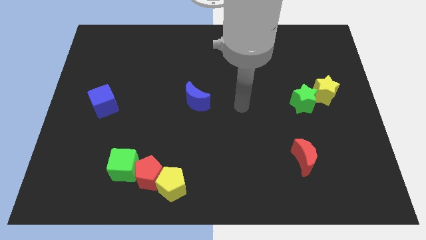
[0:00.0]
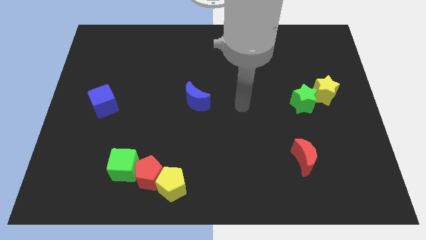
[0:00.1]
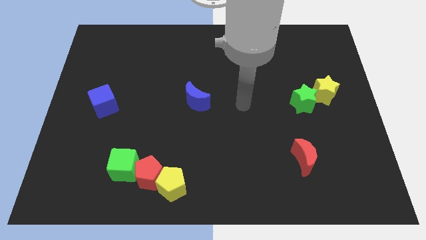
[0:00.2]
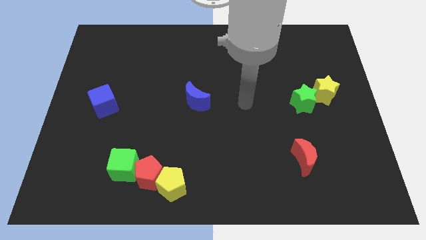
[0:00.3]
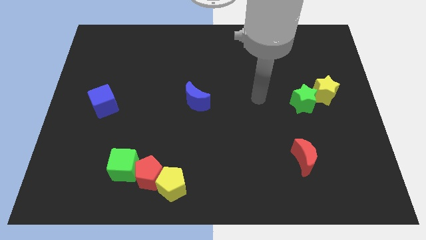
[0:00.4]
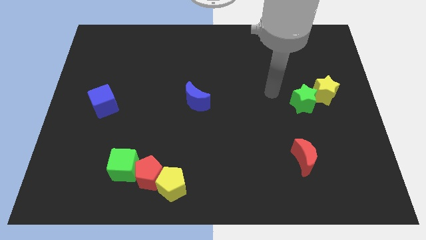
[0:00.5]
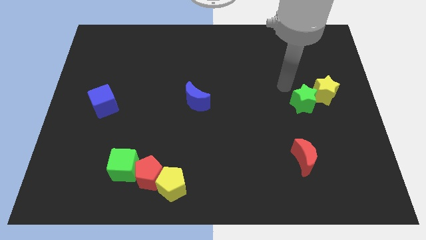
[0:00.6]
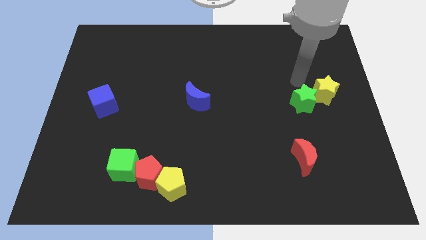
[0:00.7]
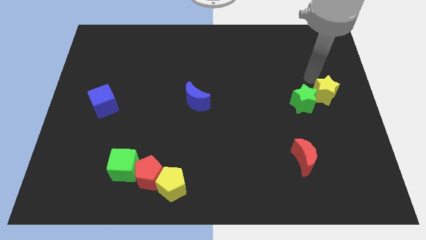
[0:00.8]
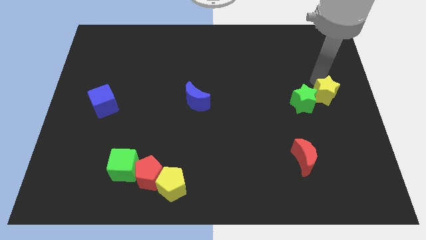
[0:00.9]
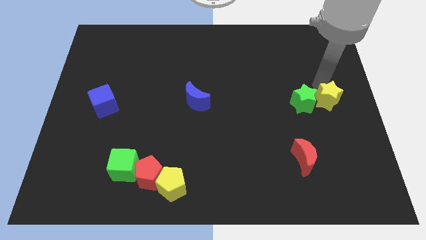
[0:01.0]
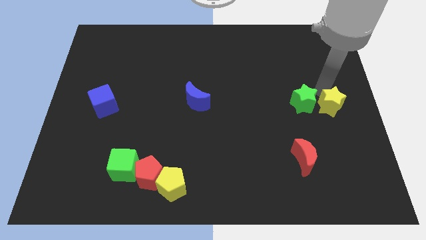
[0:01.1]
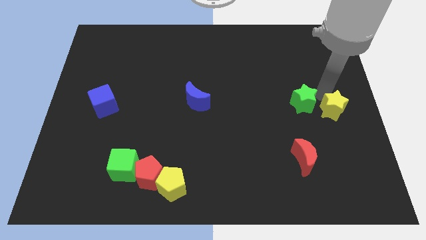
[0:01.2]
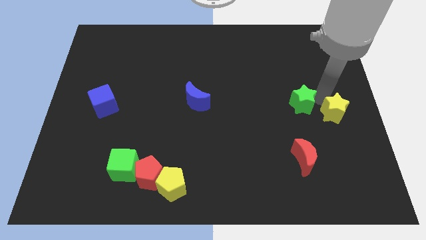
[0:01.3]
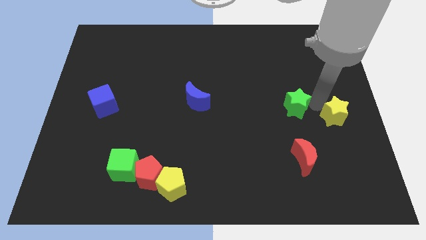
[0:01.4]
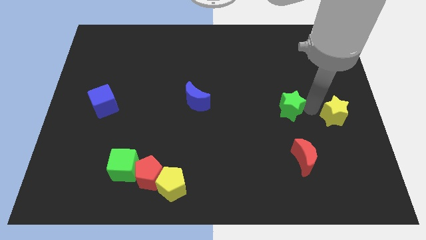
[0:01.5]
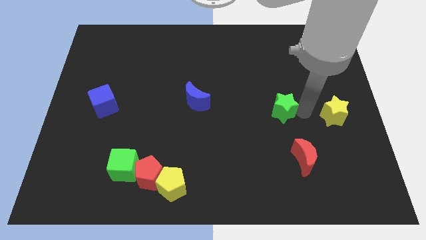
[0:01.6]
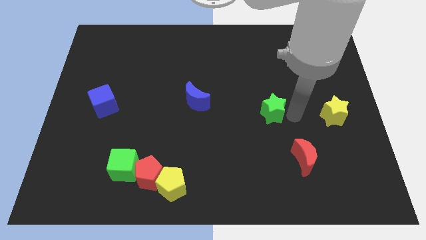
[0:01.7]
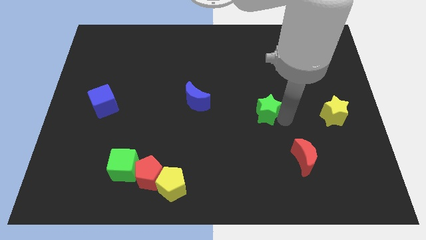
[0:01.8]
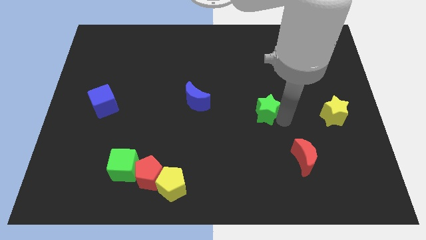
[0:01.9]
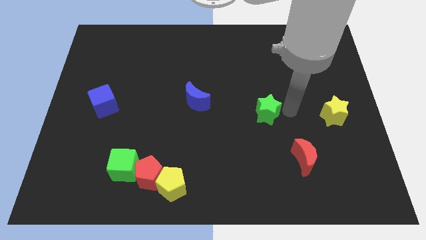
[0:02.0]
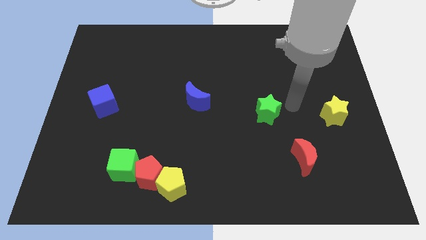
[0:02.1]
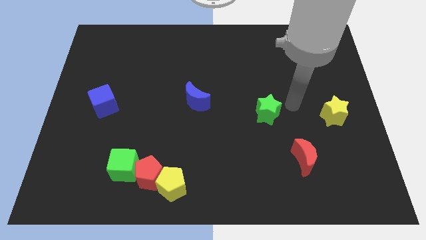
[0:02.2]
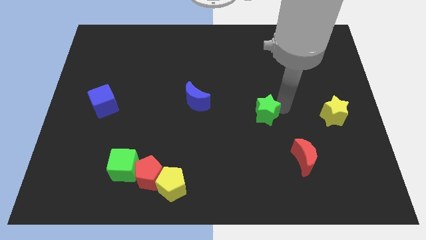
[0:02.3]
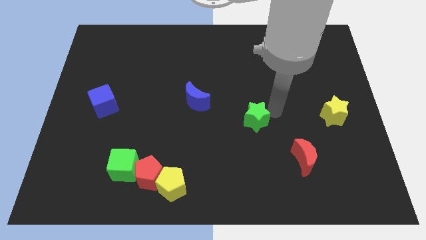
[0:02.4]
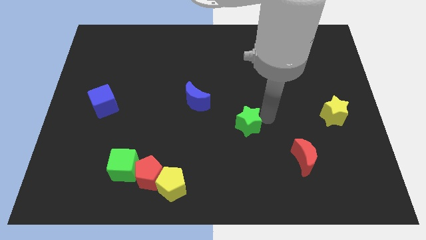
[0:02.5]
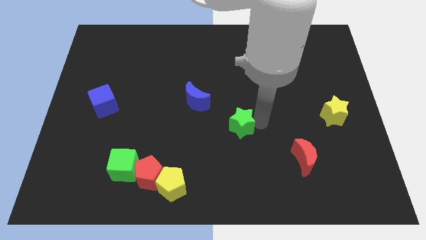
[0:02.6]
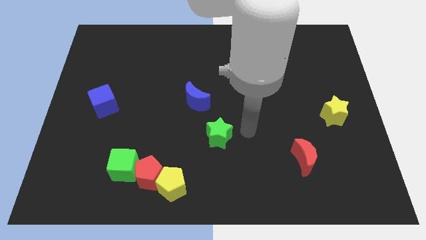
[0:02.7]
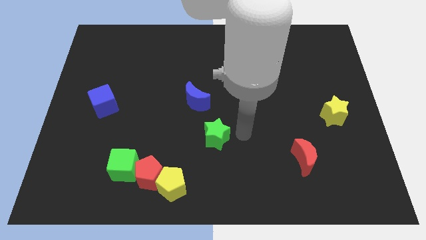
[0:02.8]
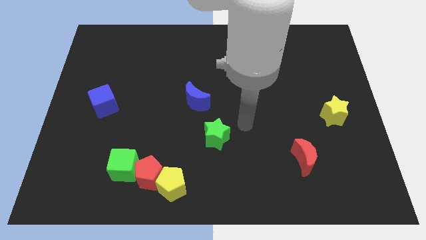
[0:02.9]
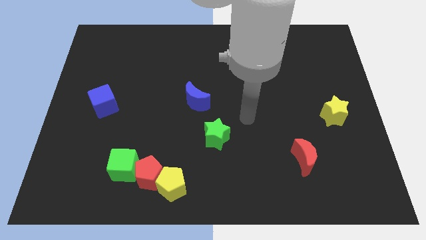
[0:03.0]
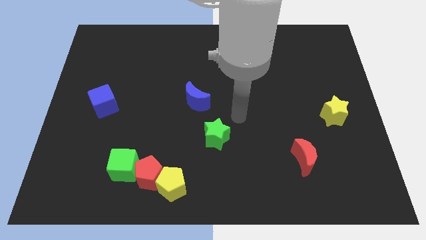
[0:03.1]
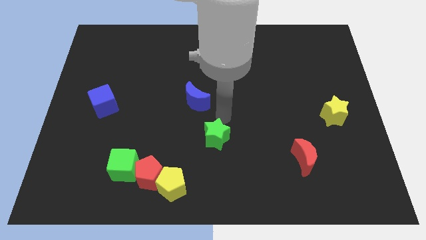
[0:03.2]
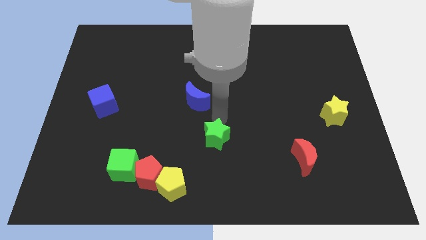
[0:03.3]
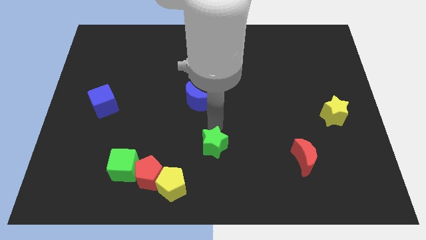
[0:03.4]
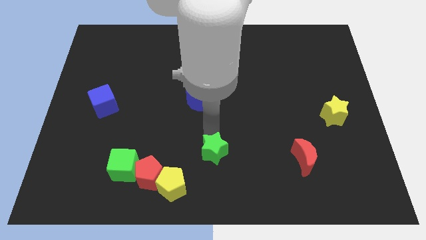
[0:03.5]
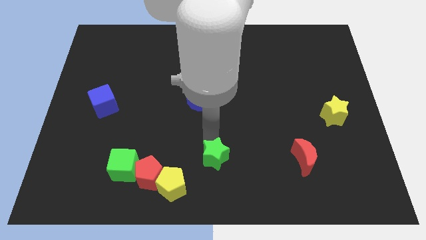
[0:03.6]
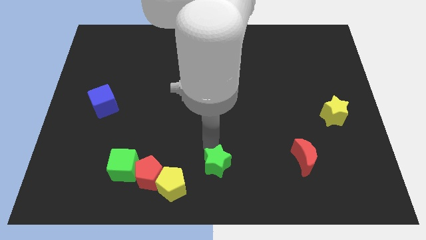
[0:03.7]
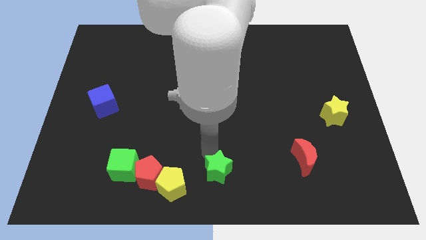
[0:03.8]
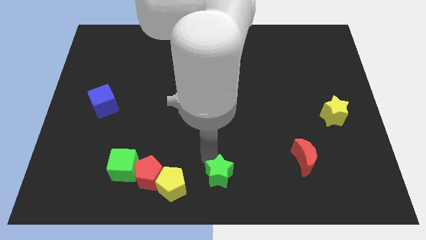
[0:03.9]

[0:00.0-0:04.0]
move the green star to the bottom center

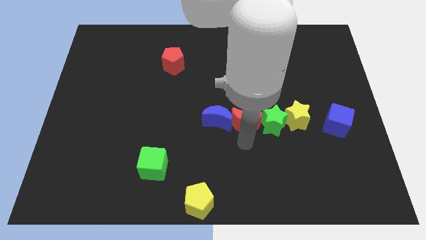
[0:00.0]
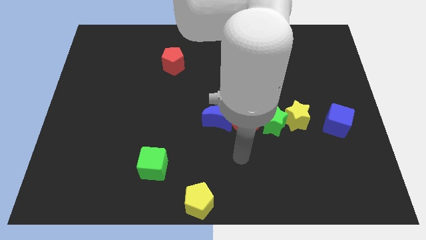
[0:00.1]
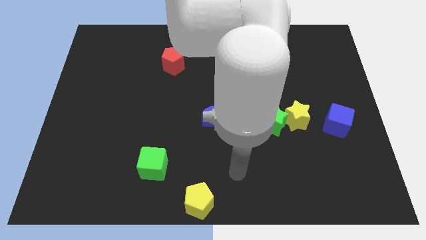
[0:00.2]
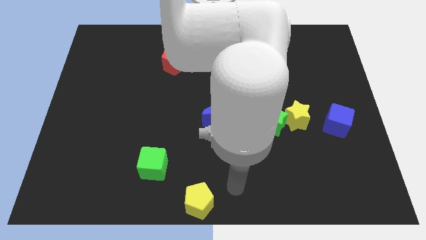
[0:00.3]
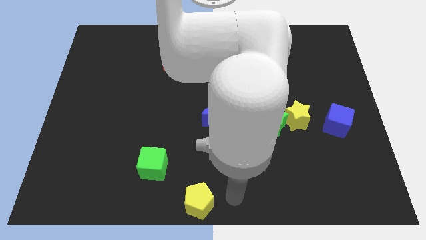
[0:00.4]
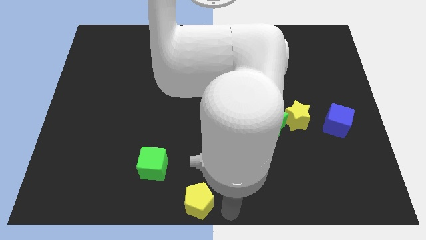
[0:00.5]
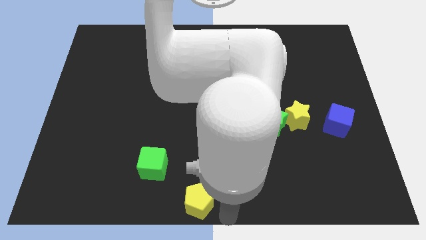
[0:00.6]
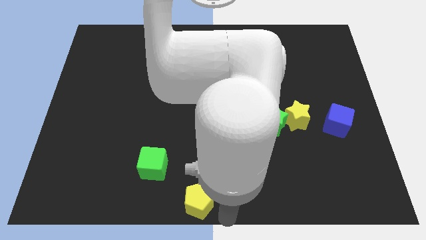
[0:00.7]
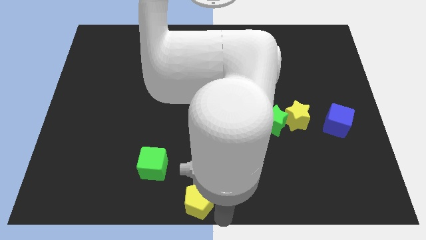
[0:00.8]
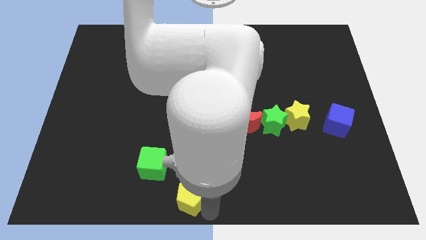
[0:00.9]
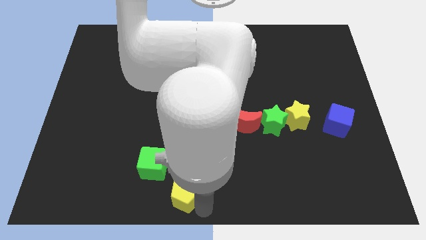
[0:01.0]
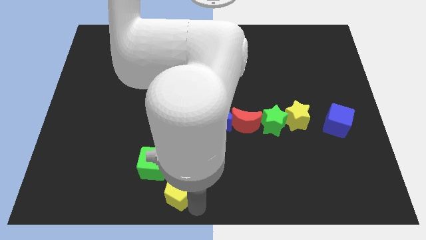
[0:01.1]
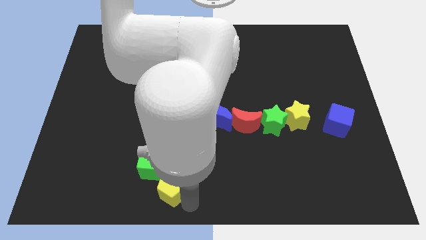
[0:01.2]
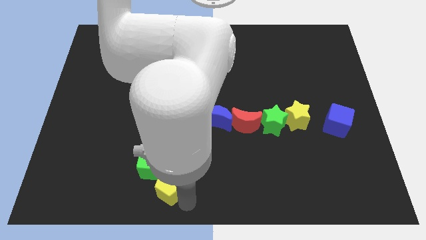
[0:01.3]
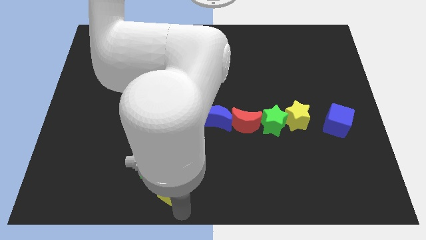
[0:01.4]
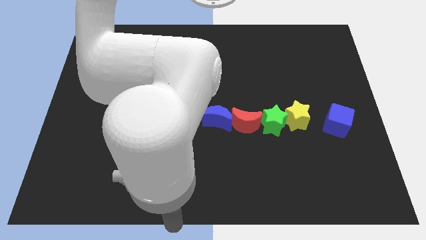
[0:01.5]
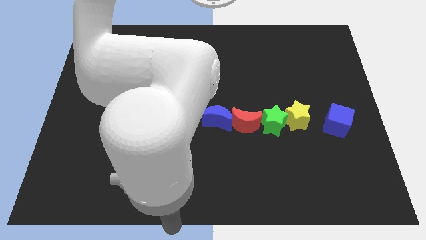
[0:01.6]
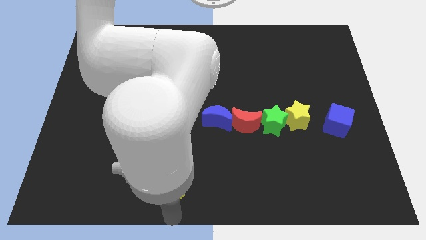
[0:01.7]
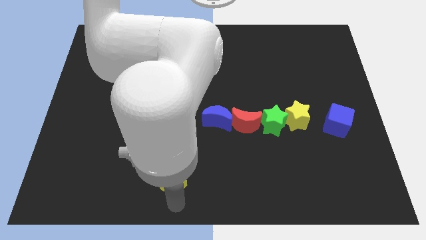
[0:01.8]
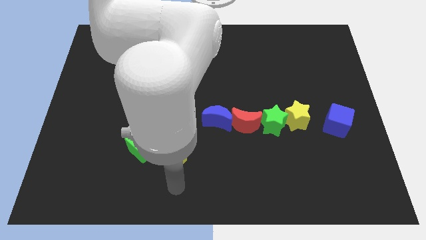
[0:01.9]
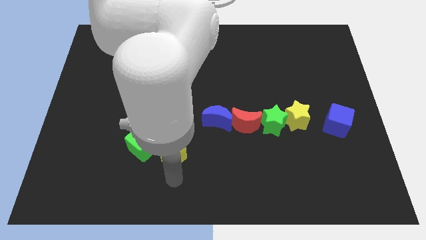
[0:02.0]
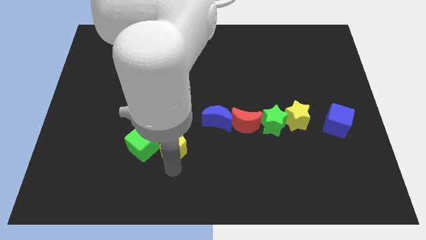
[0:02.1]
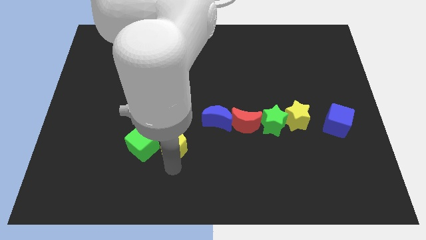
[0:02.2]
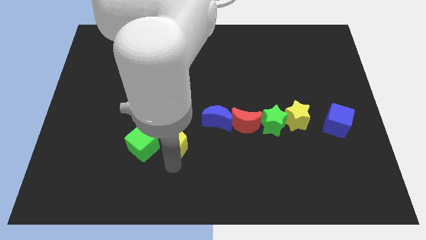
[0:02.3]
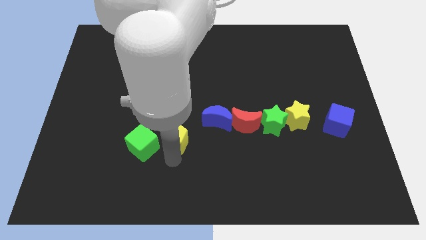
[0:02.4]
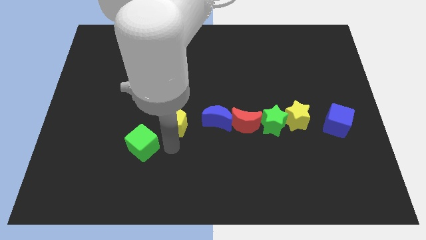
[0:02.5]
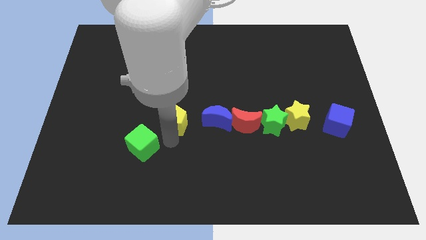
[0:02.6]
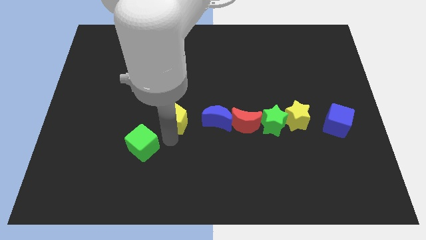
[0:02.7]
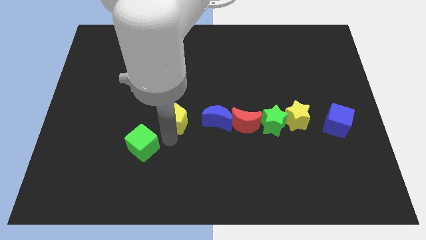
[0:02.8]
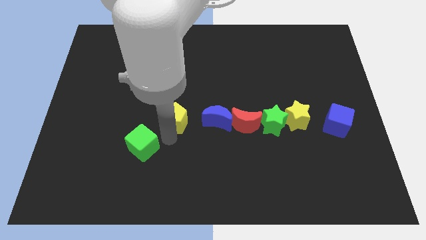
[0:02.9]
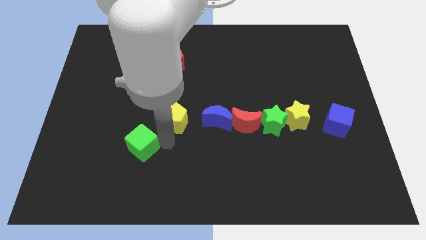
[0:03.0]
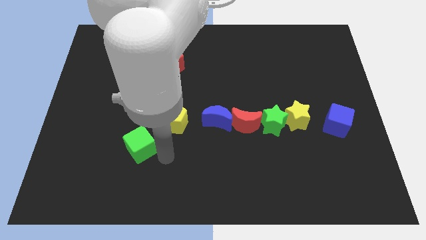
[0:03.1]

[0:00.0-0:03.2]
push the yellow pentagon and the green cube towards center left

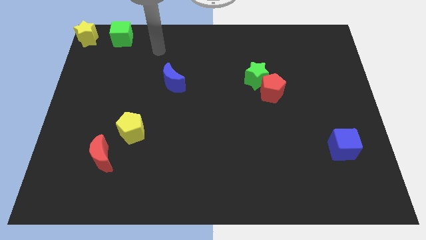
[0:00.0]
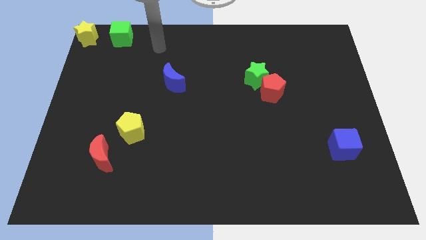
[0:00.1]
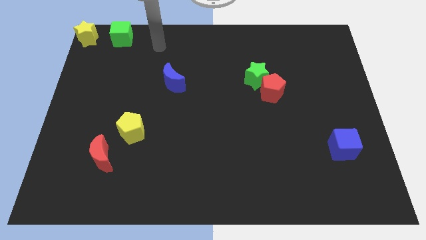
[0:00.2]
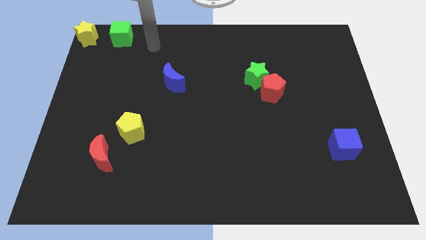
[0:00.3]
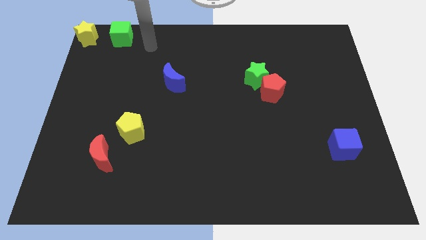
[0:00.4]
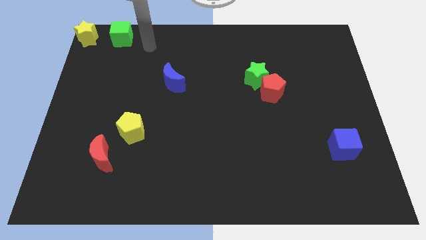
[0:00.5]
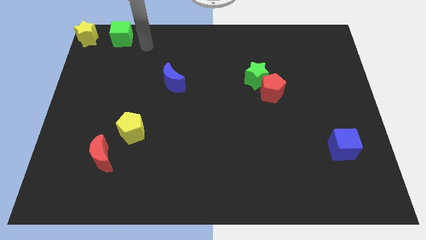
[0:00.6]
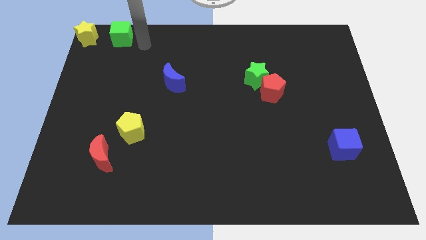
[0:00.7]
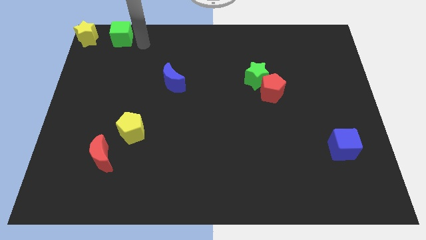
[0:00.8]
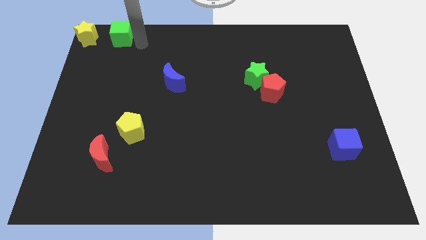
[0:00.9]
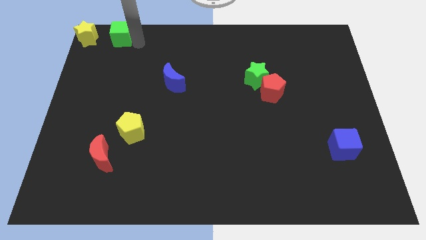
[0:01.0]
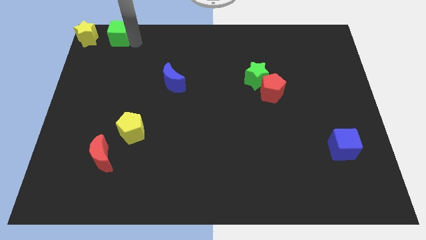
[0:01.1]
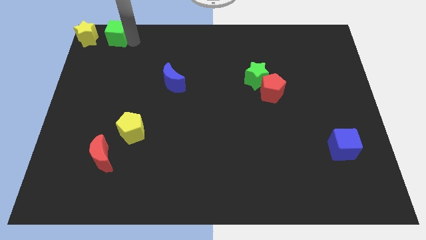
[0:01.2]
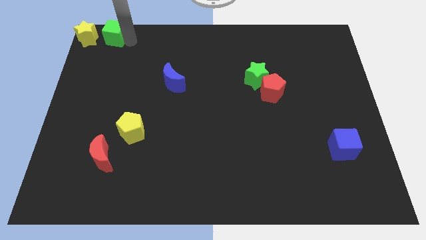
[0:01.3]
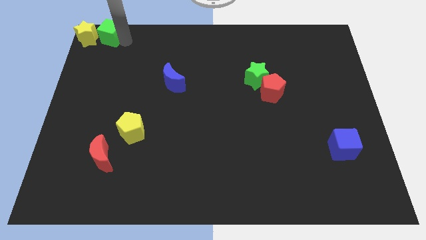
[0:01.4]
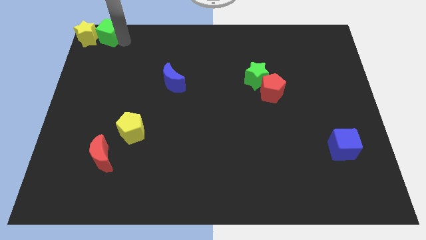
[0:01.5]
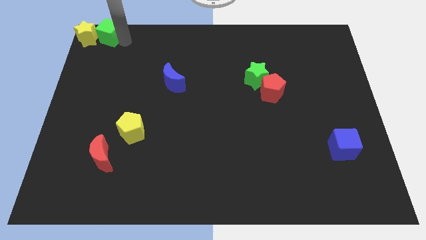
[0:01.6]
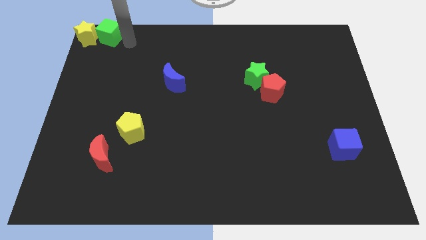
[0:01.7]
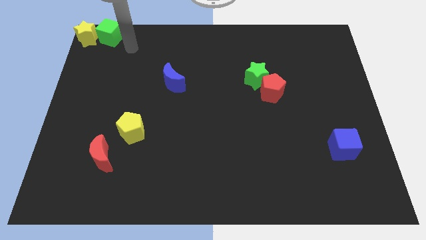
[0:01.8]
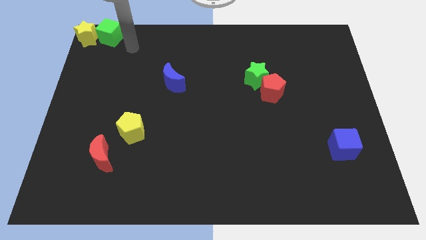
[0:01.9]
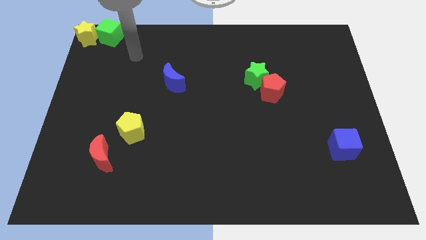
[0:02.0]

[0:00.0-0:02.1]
move the green cube to the right side of the yellow star
